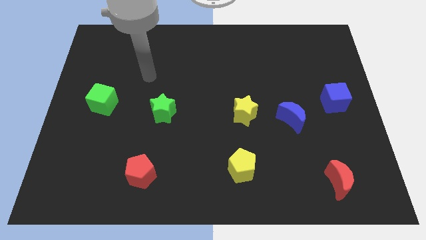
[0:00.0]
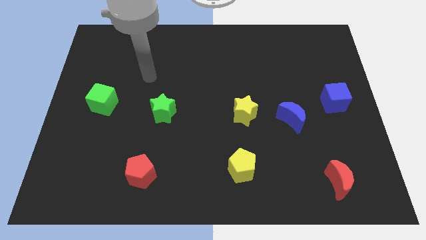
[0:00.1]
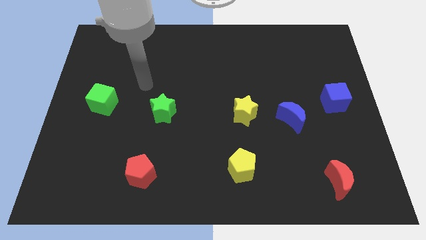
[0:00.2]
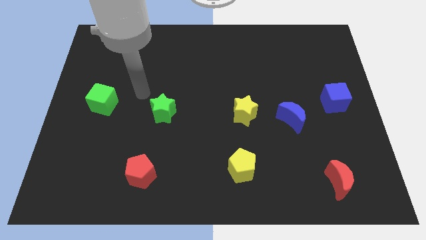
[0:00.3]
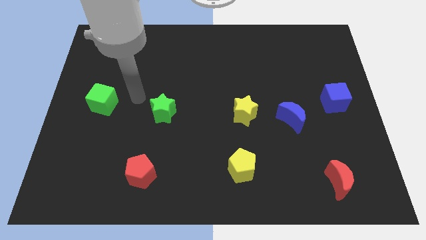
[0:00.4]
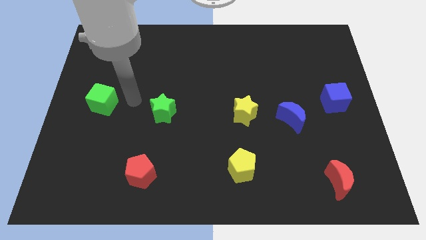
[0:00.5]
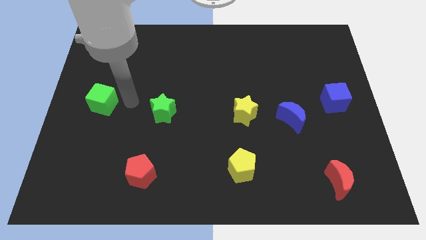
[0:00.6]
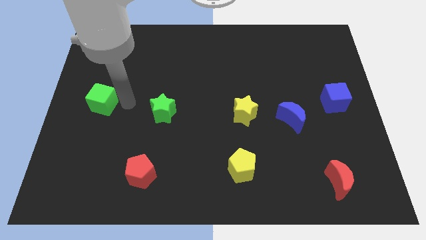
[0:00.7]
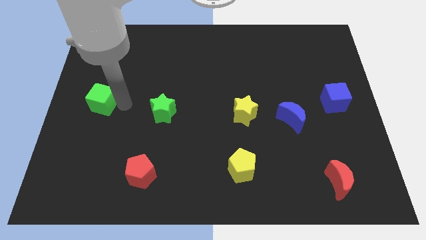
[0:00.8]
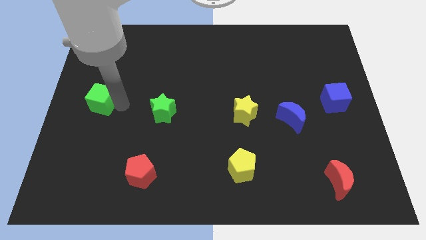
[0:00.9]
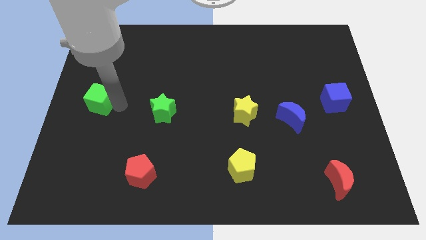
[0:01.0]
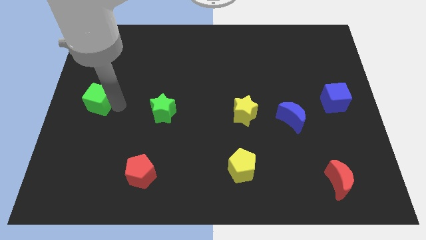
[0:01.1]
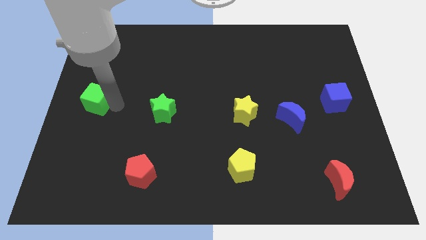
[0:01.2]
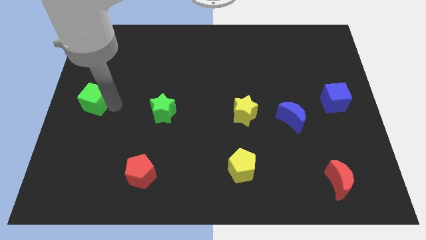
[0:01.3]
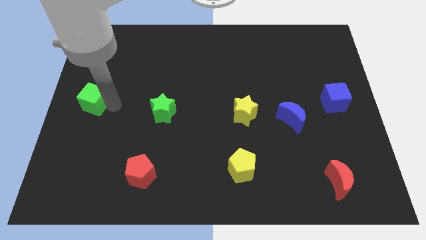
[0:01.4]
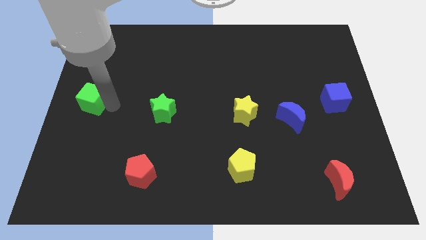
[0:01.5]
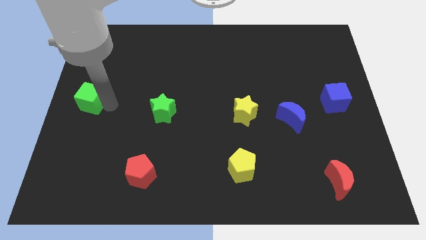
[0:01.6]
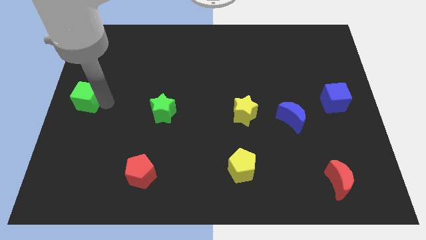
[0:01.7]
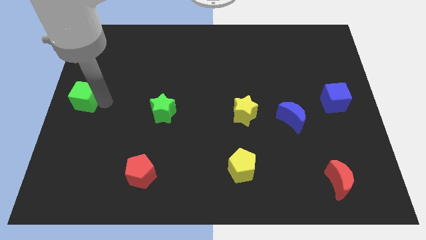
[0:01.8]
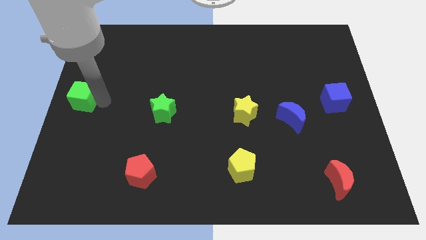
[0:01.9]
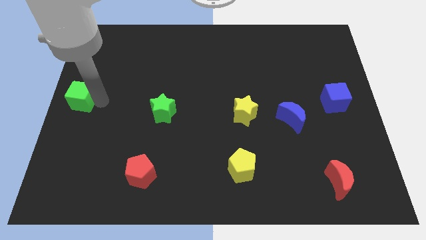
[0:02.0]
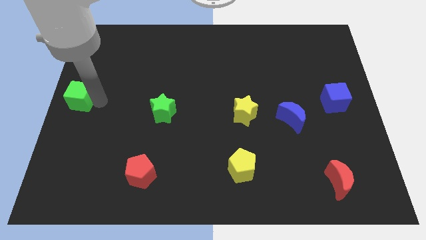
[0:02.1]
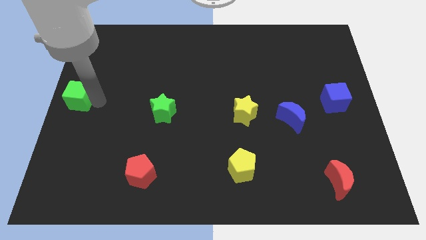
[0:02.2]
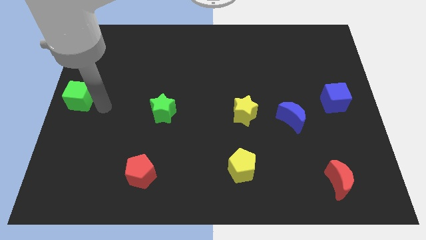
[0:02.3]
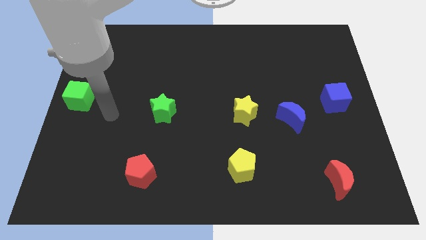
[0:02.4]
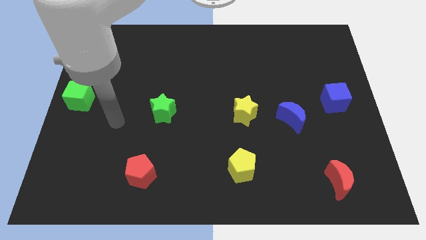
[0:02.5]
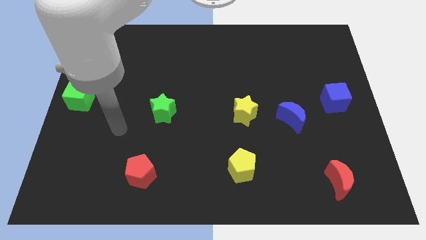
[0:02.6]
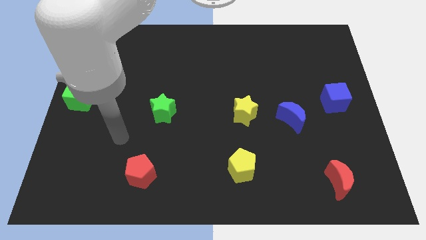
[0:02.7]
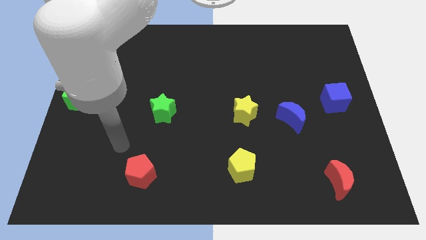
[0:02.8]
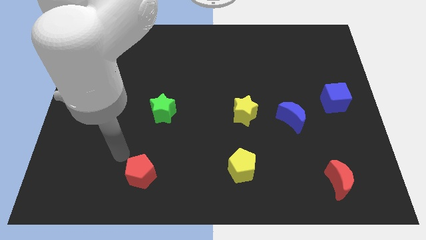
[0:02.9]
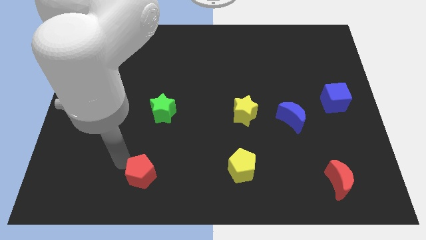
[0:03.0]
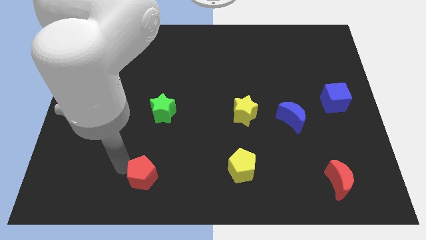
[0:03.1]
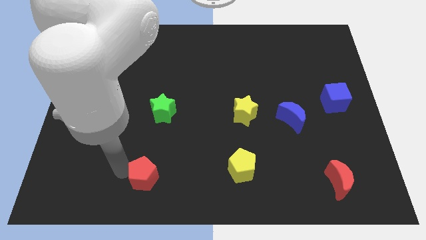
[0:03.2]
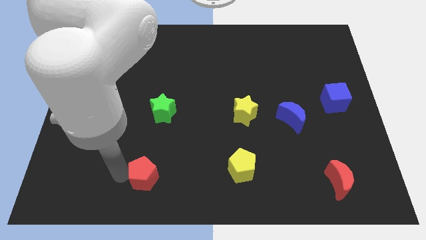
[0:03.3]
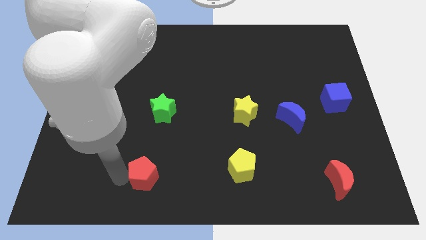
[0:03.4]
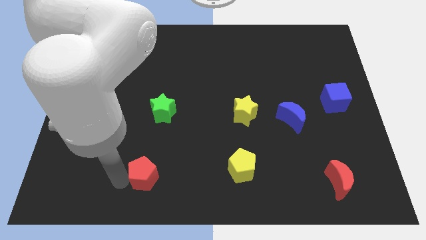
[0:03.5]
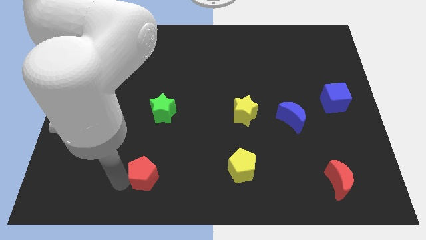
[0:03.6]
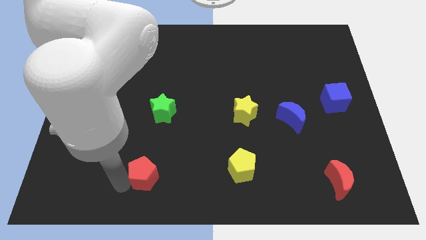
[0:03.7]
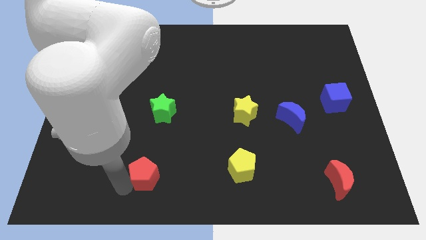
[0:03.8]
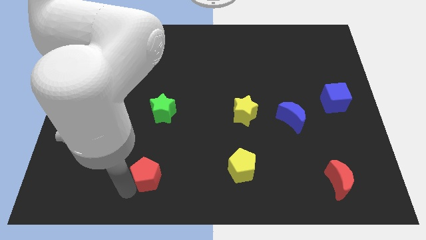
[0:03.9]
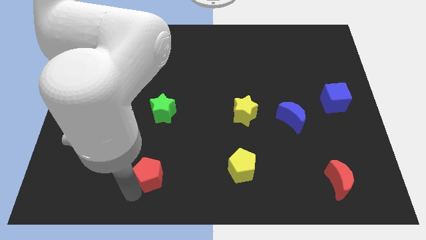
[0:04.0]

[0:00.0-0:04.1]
point your arm left to red pentagon

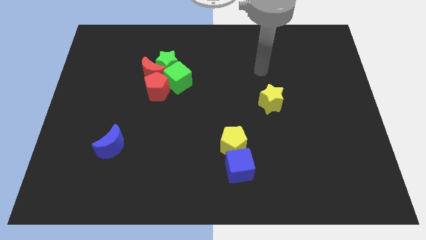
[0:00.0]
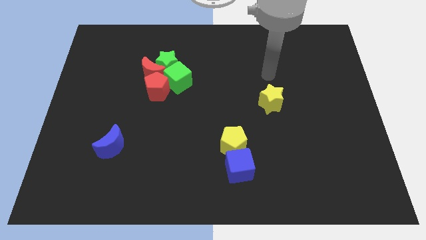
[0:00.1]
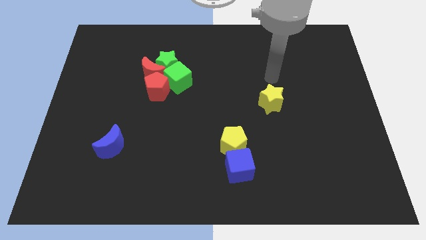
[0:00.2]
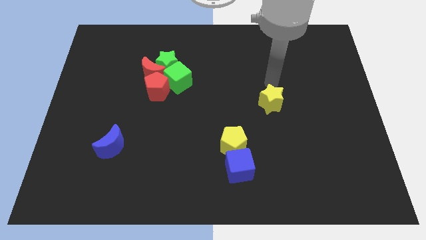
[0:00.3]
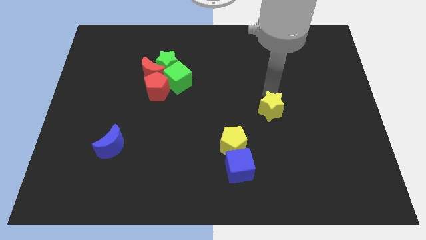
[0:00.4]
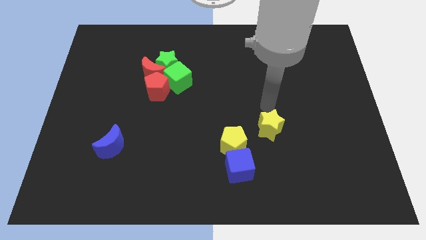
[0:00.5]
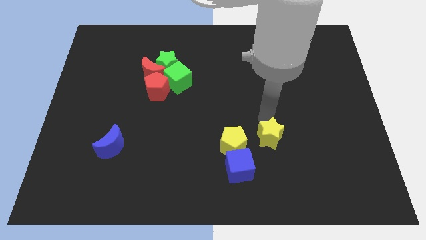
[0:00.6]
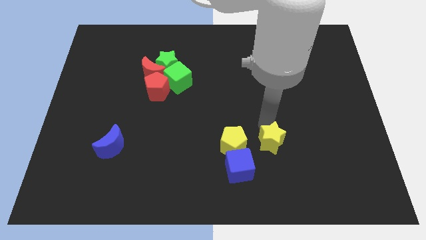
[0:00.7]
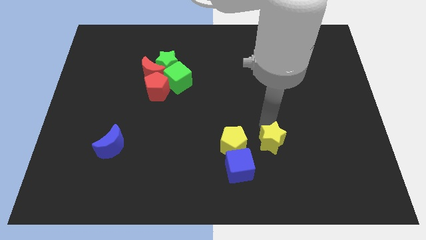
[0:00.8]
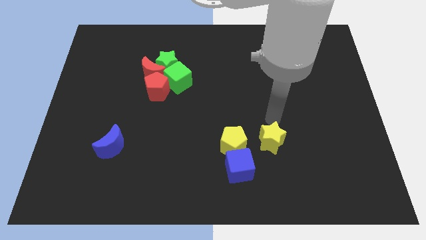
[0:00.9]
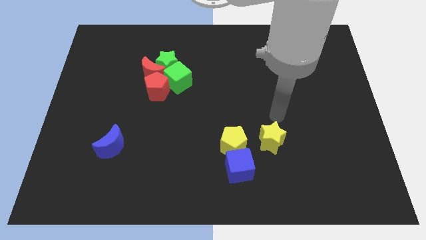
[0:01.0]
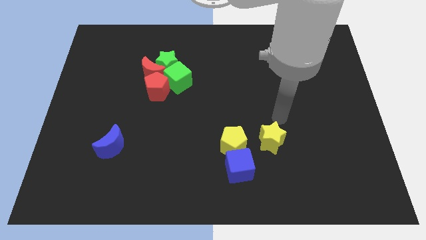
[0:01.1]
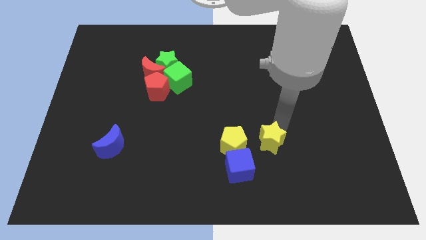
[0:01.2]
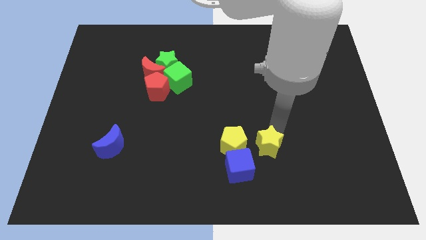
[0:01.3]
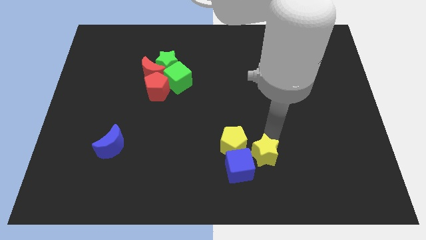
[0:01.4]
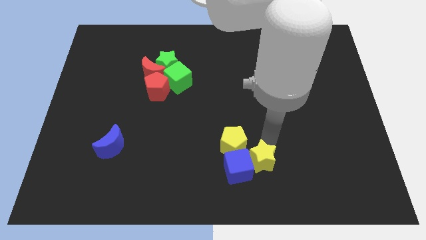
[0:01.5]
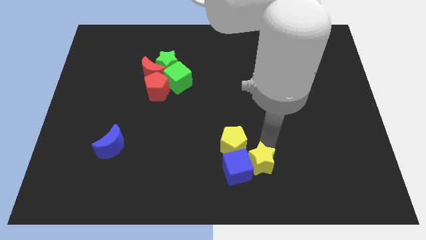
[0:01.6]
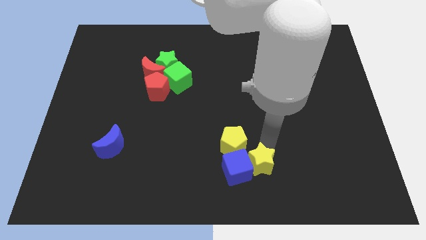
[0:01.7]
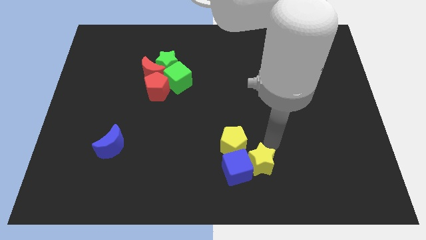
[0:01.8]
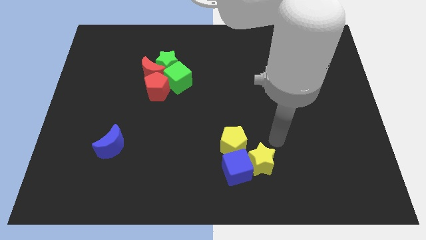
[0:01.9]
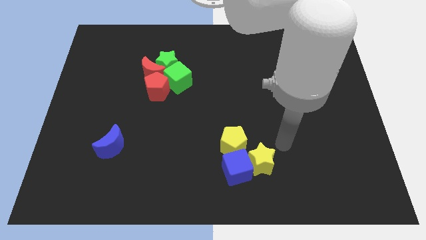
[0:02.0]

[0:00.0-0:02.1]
move the yellow star to the right side of the blue cube

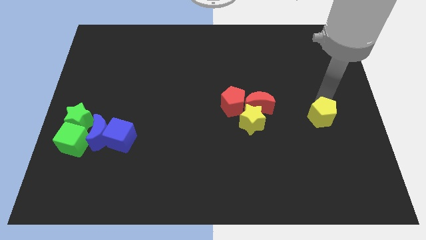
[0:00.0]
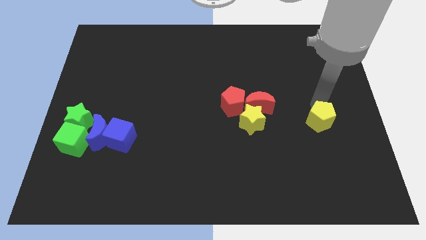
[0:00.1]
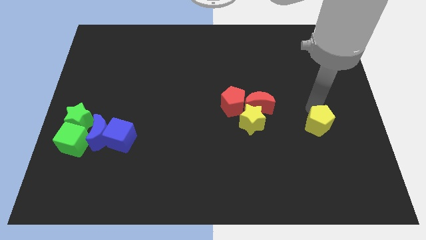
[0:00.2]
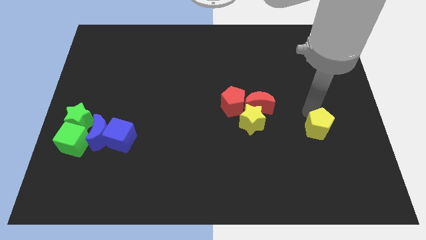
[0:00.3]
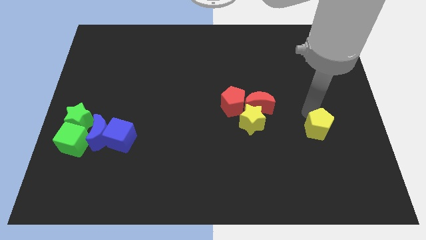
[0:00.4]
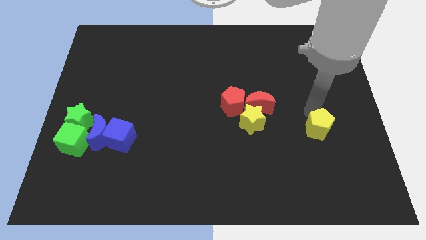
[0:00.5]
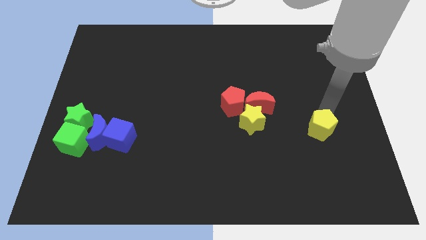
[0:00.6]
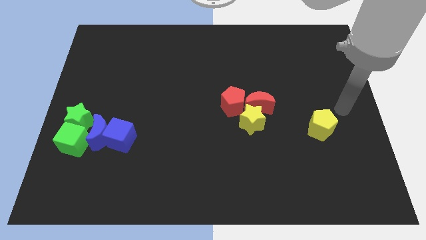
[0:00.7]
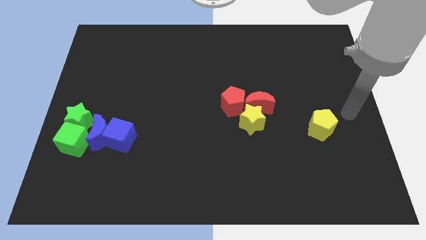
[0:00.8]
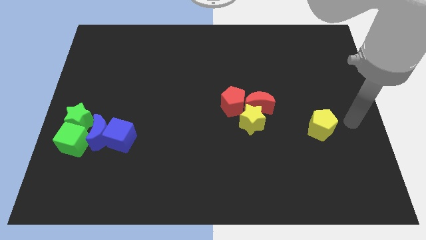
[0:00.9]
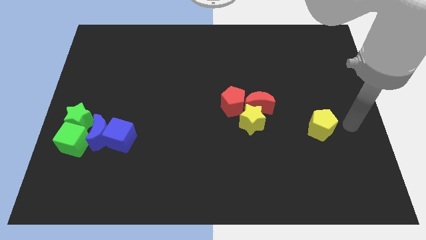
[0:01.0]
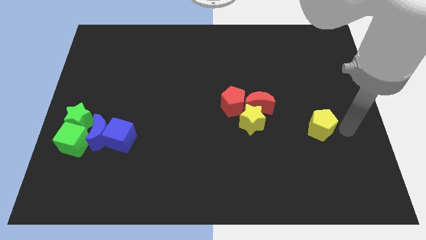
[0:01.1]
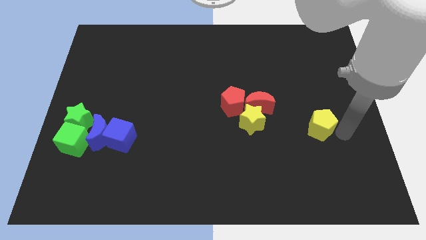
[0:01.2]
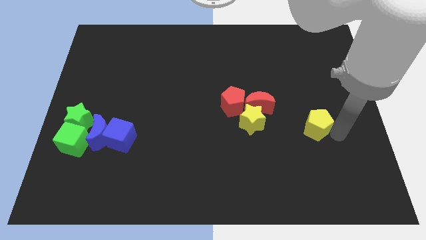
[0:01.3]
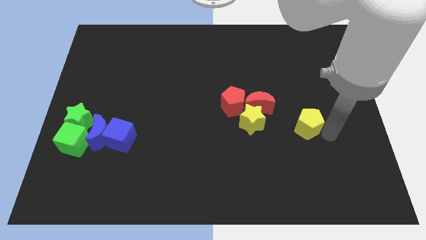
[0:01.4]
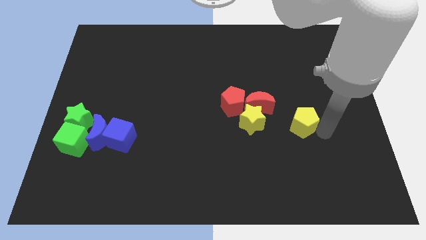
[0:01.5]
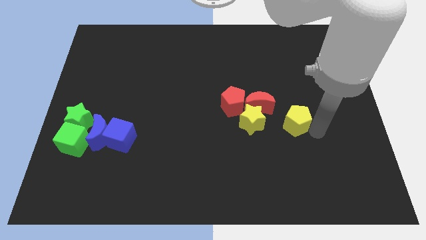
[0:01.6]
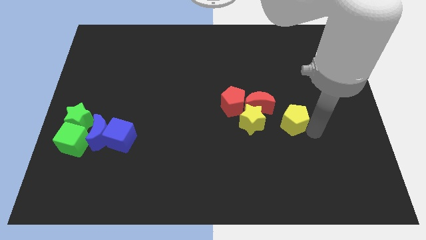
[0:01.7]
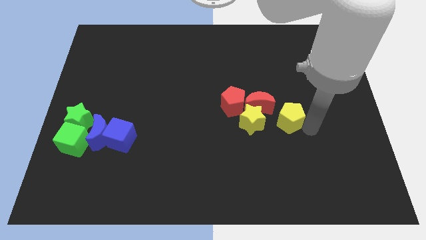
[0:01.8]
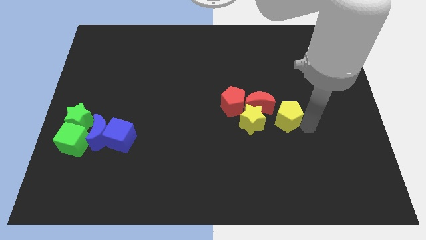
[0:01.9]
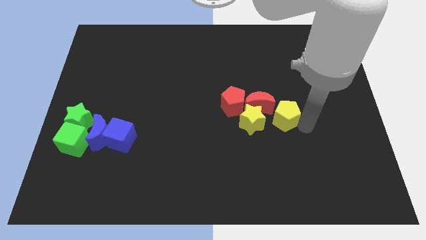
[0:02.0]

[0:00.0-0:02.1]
place the yellow pentagon close to the yellow star

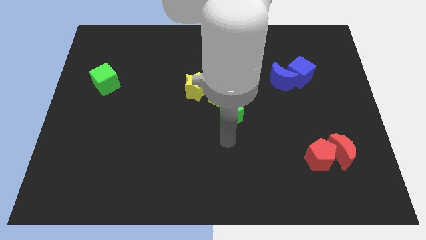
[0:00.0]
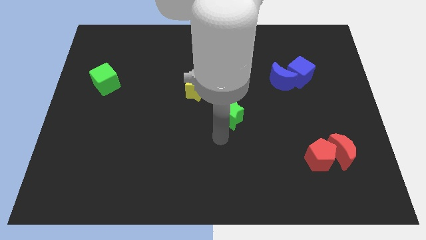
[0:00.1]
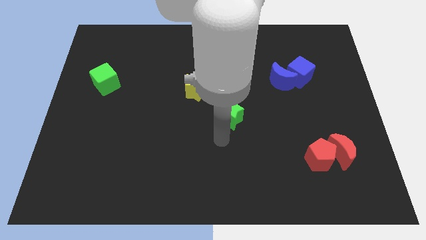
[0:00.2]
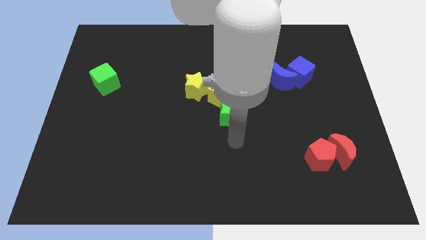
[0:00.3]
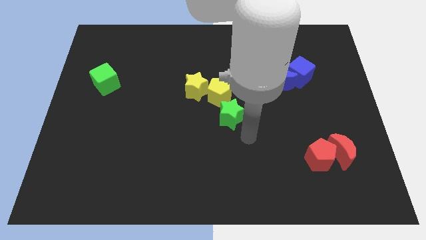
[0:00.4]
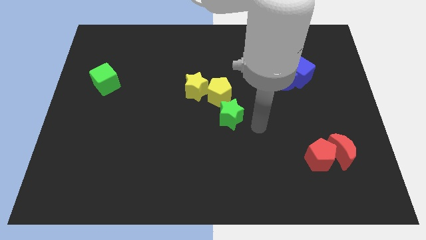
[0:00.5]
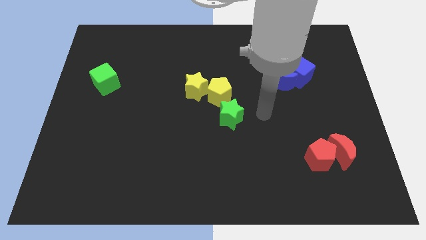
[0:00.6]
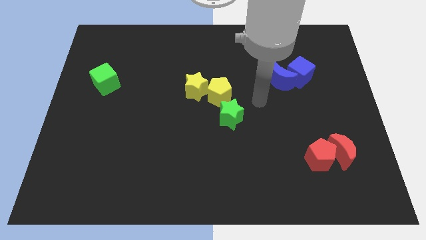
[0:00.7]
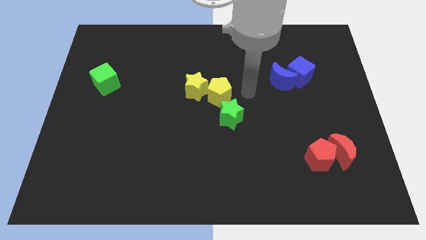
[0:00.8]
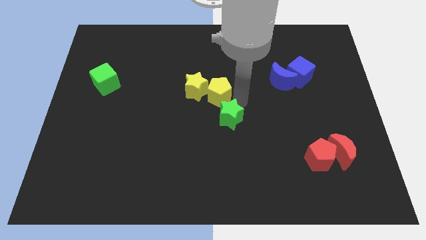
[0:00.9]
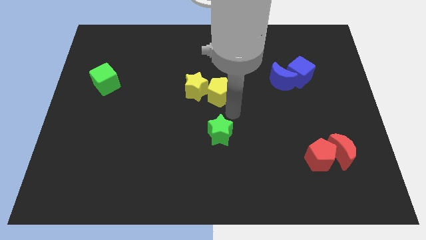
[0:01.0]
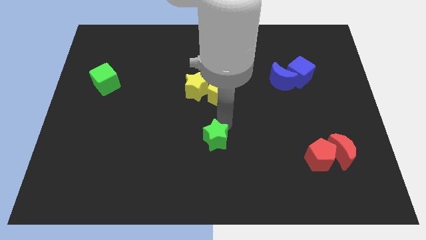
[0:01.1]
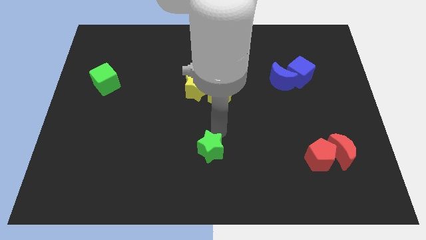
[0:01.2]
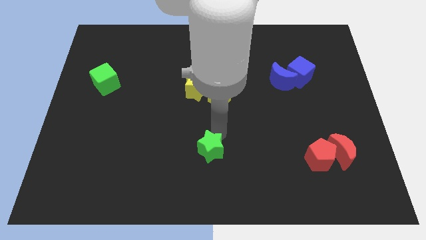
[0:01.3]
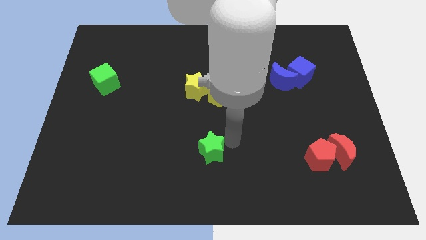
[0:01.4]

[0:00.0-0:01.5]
slide the green star to the bottom center
